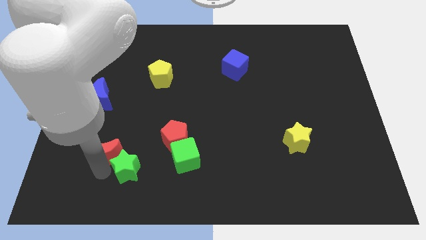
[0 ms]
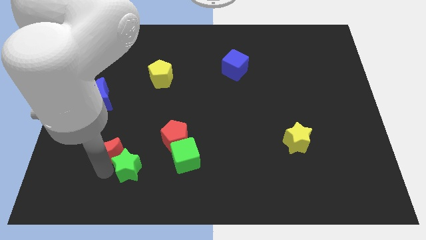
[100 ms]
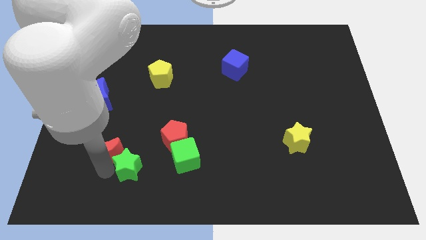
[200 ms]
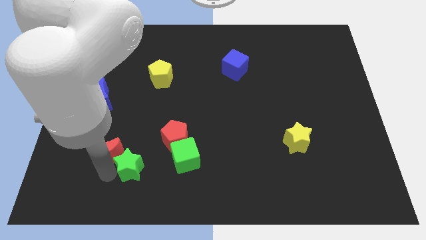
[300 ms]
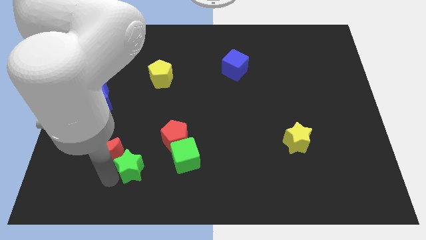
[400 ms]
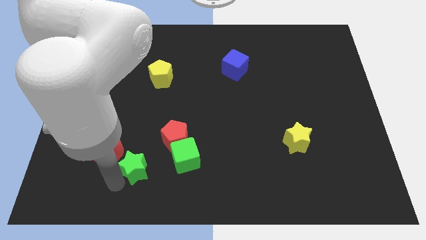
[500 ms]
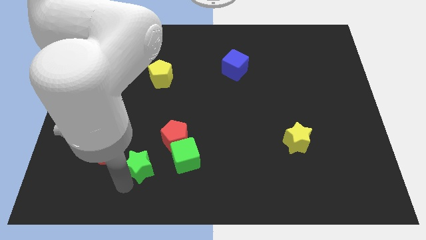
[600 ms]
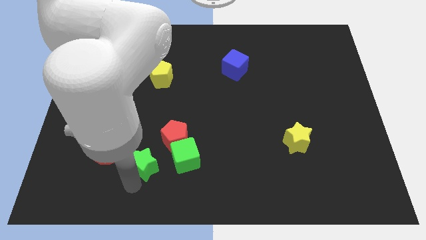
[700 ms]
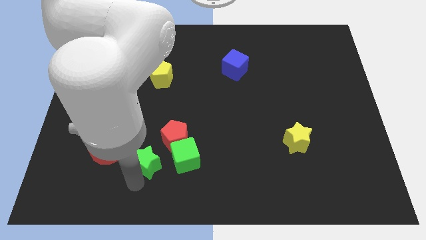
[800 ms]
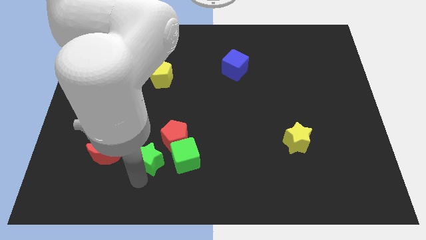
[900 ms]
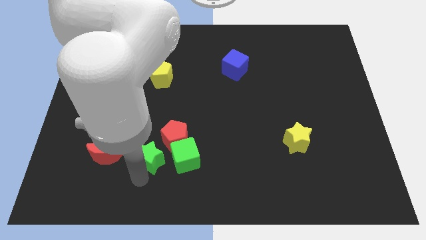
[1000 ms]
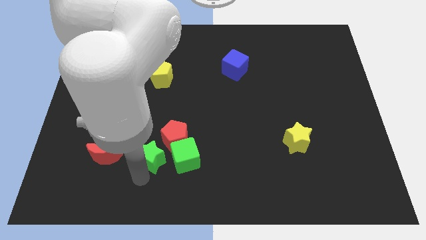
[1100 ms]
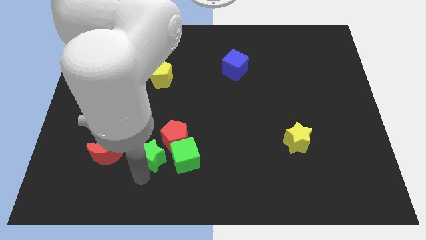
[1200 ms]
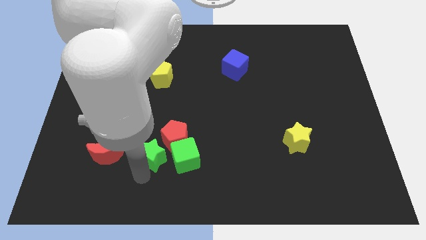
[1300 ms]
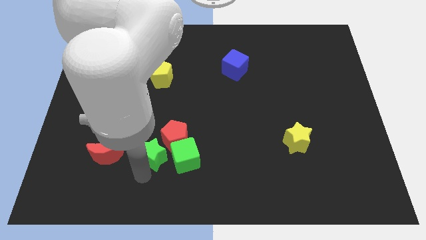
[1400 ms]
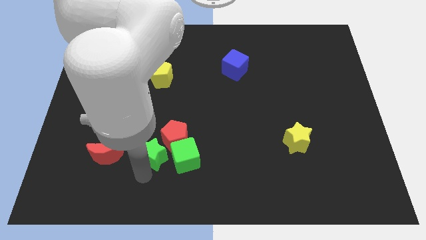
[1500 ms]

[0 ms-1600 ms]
place the green star in between the red moon and green cube

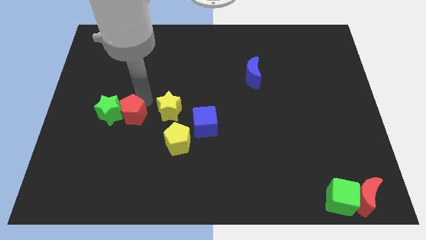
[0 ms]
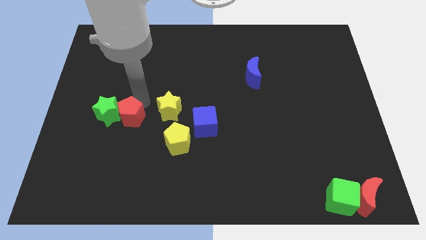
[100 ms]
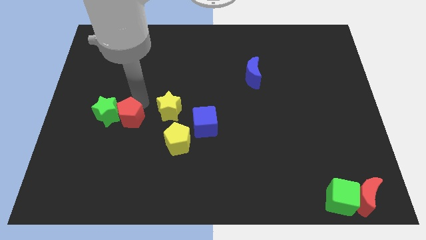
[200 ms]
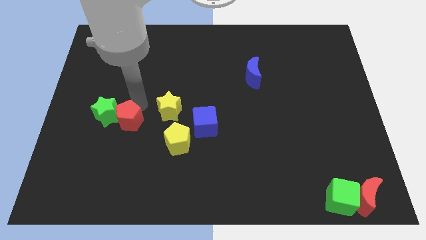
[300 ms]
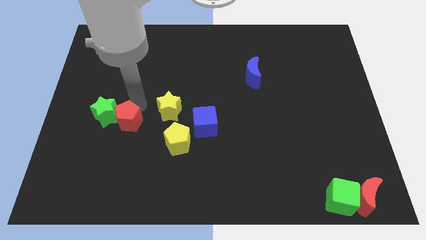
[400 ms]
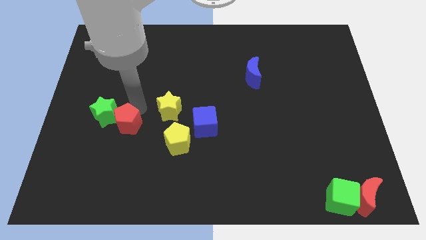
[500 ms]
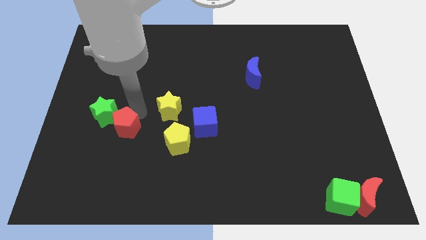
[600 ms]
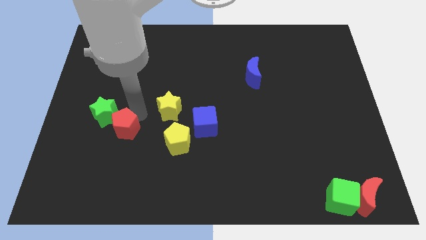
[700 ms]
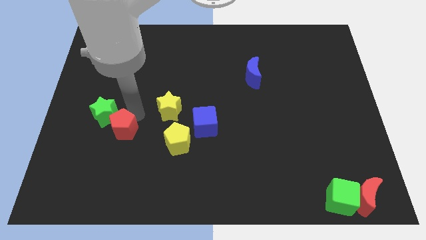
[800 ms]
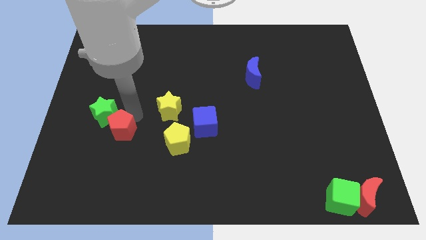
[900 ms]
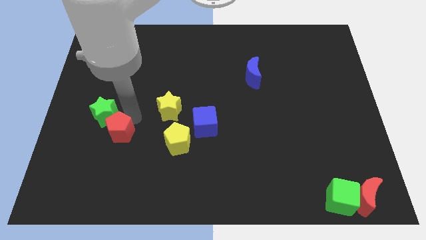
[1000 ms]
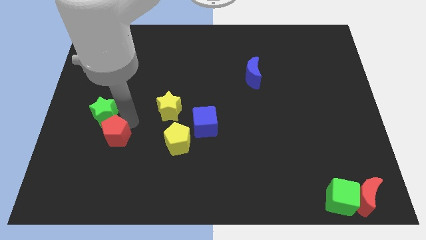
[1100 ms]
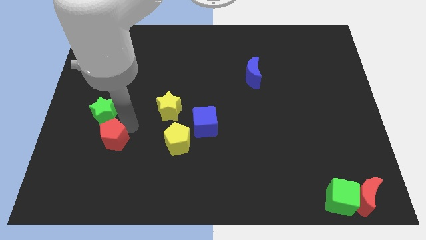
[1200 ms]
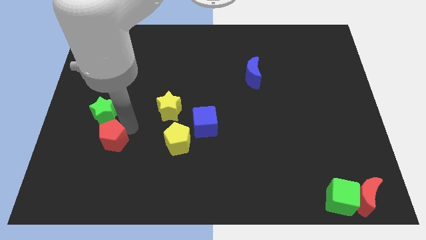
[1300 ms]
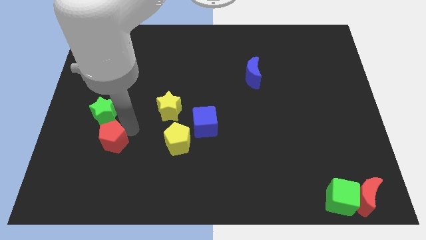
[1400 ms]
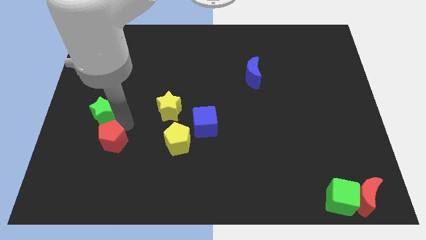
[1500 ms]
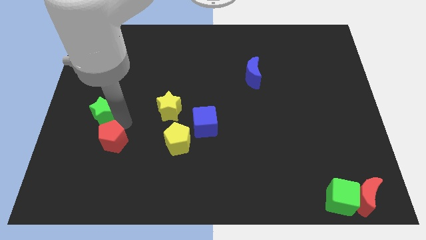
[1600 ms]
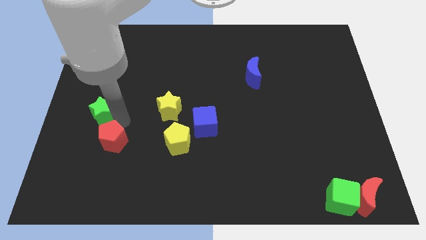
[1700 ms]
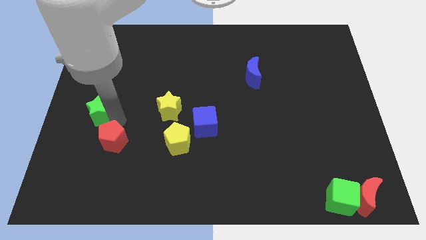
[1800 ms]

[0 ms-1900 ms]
place the red pentagon below the green star

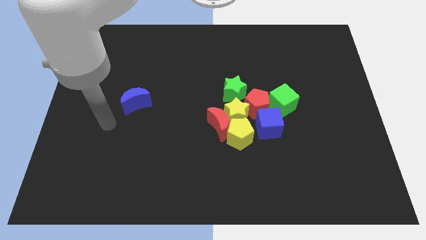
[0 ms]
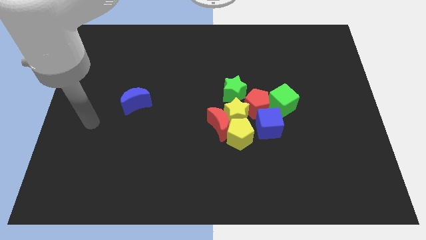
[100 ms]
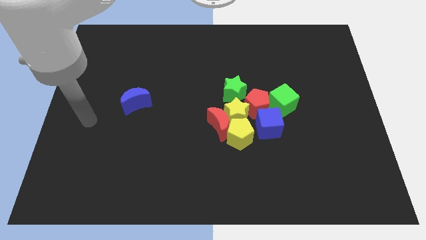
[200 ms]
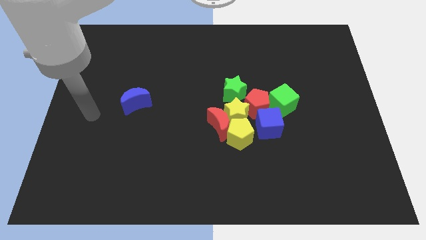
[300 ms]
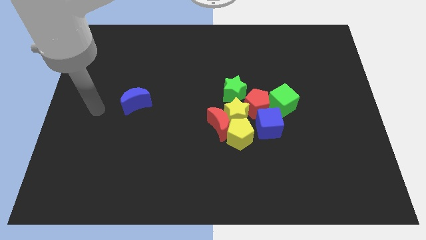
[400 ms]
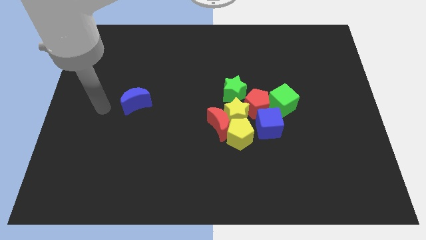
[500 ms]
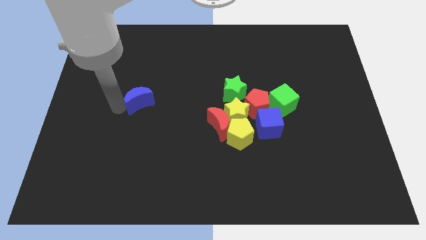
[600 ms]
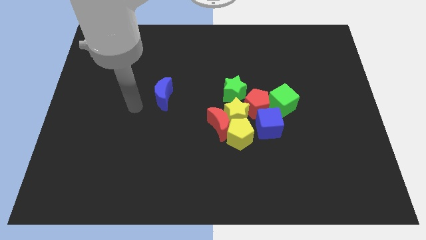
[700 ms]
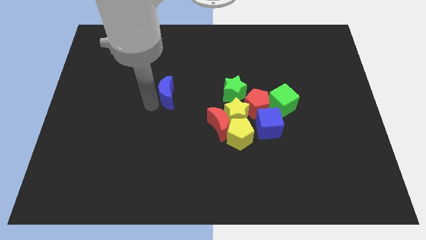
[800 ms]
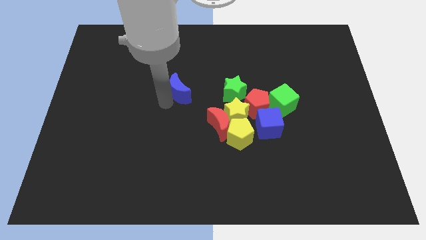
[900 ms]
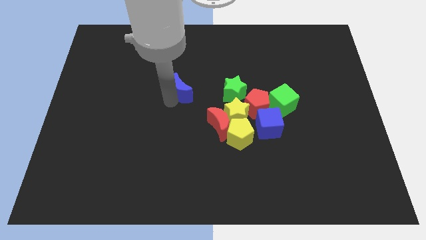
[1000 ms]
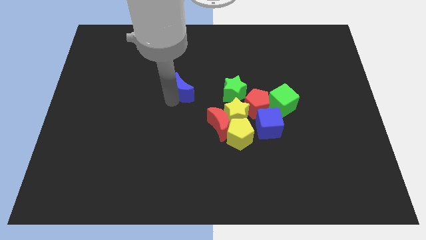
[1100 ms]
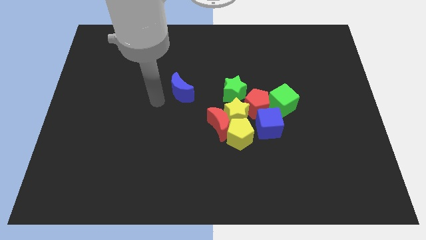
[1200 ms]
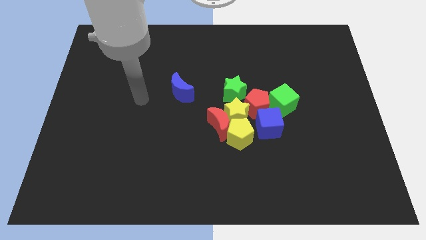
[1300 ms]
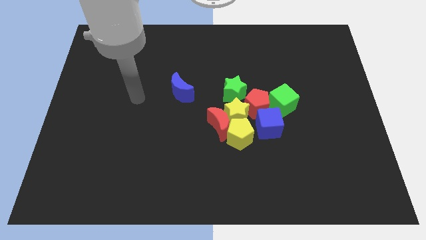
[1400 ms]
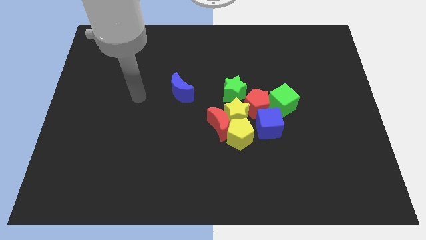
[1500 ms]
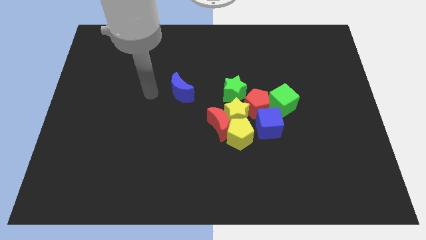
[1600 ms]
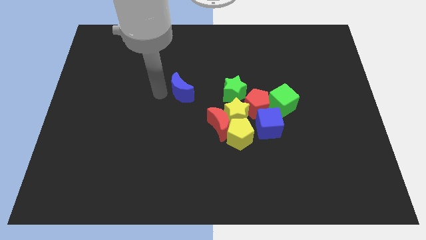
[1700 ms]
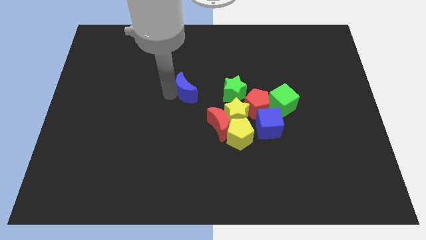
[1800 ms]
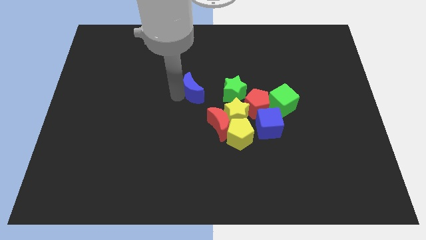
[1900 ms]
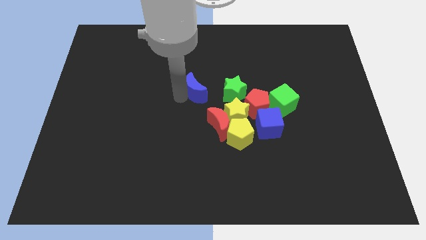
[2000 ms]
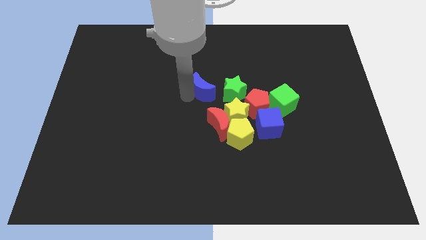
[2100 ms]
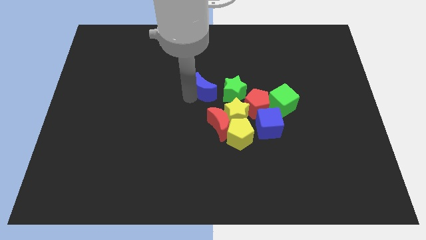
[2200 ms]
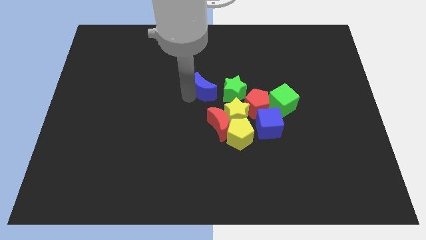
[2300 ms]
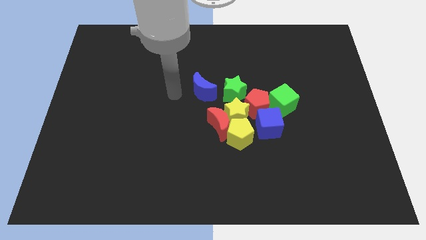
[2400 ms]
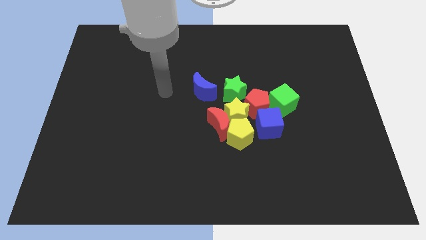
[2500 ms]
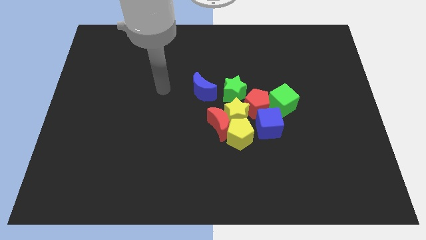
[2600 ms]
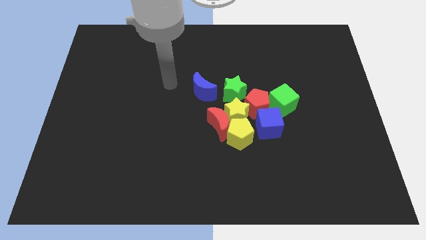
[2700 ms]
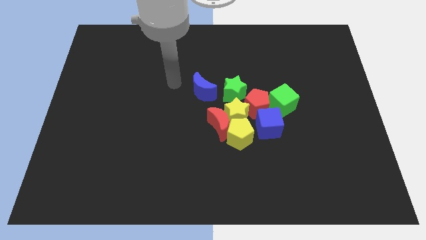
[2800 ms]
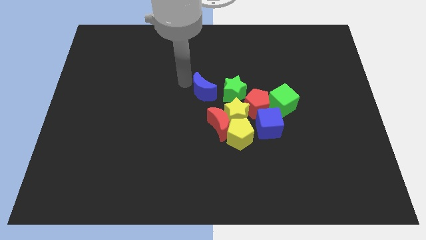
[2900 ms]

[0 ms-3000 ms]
push the blue moon to left side of the green star

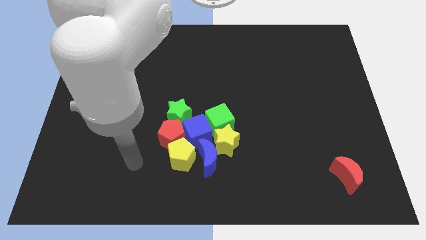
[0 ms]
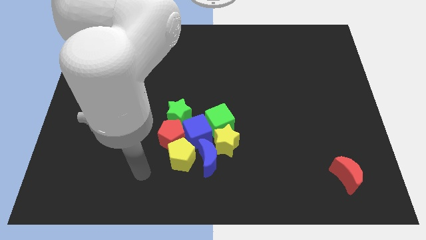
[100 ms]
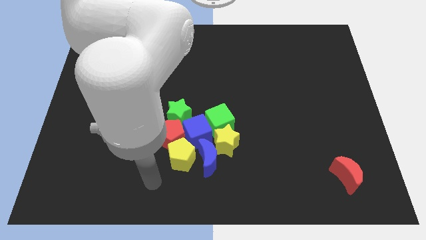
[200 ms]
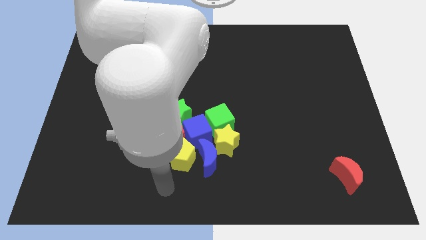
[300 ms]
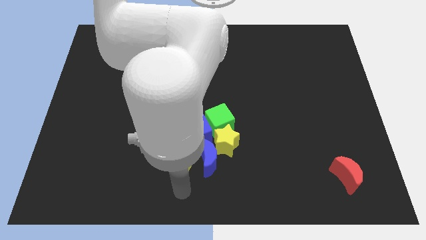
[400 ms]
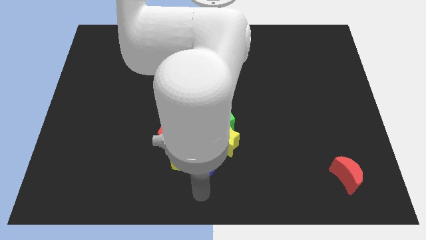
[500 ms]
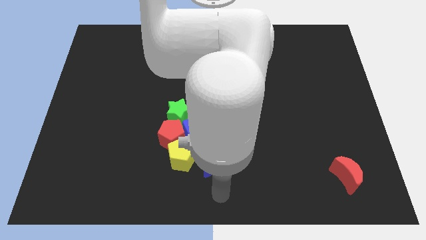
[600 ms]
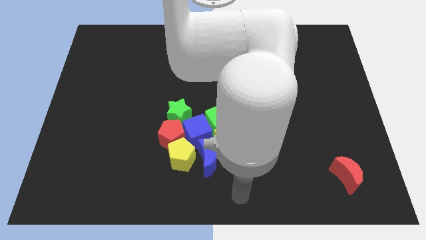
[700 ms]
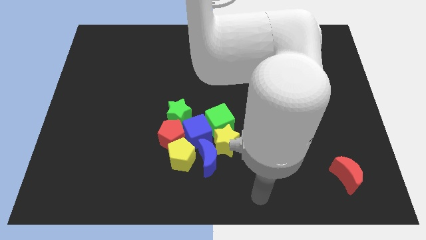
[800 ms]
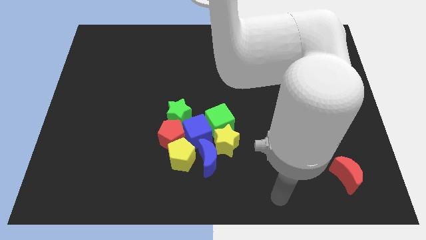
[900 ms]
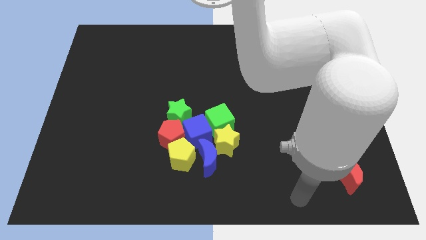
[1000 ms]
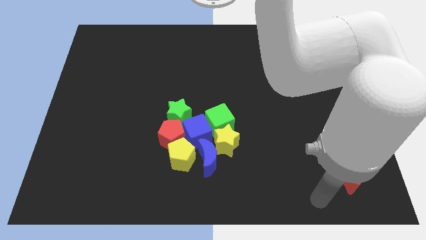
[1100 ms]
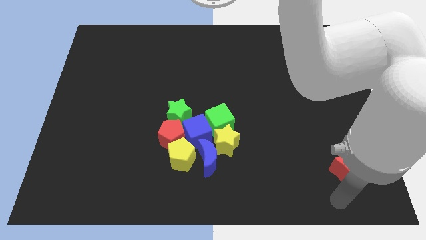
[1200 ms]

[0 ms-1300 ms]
move the arm towards the red moon

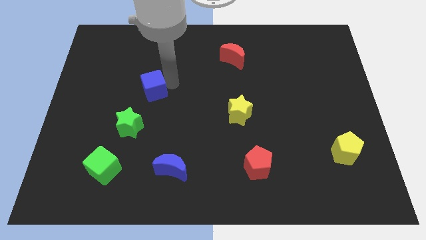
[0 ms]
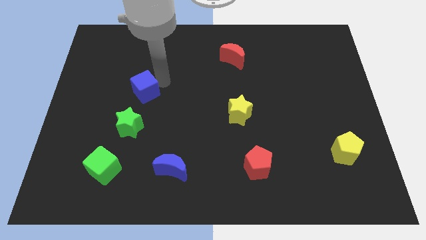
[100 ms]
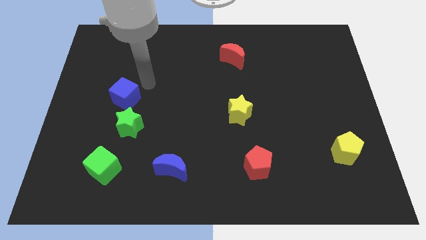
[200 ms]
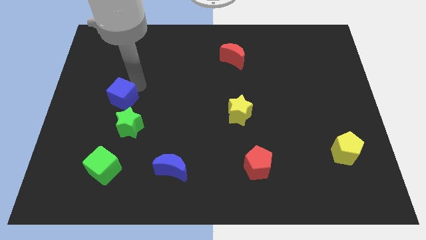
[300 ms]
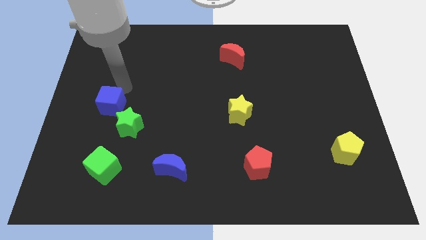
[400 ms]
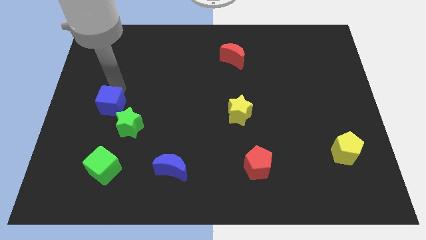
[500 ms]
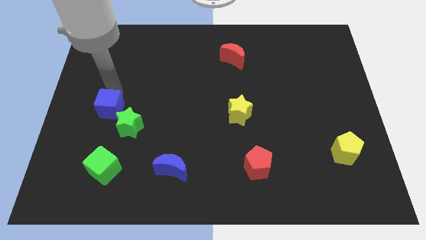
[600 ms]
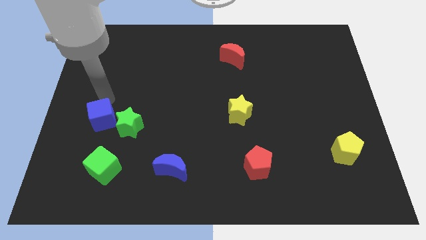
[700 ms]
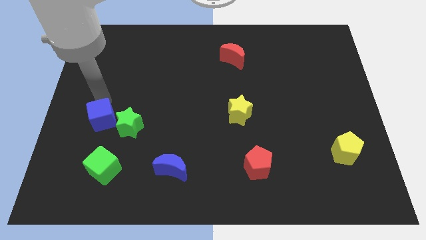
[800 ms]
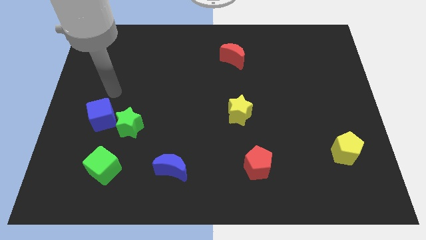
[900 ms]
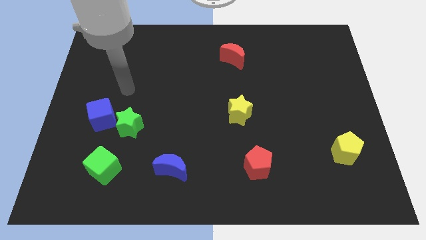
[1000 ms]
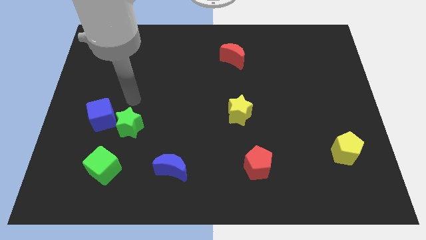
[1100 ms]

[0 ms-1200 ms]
push the blue cube to the left side of the green star
